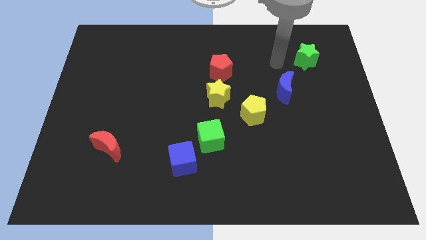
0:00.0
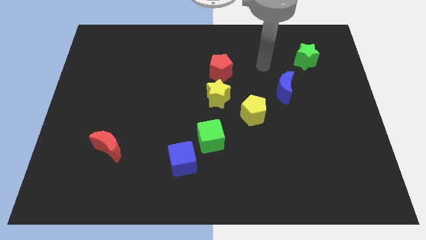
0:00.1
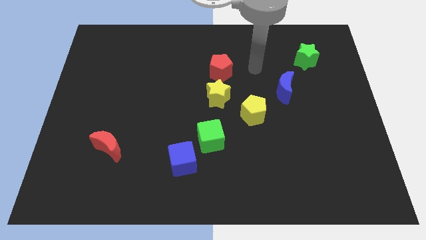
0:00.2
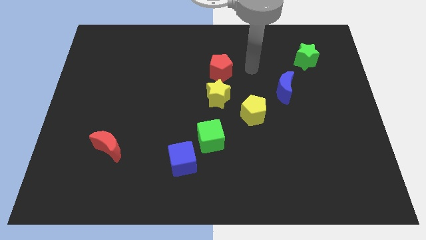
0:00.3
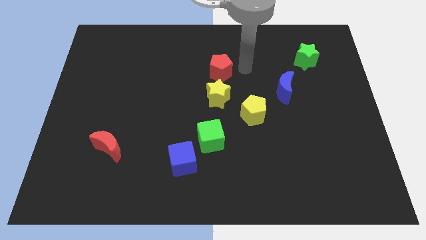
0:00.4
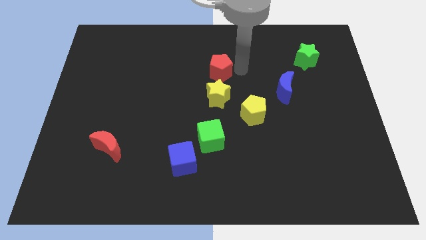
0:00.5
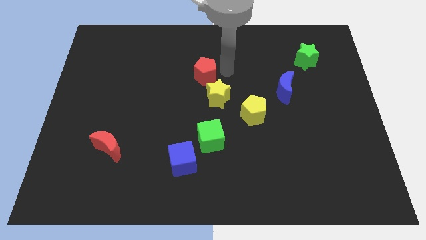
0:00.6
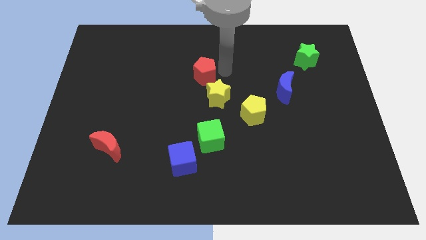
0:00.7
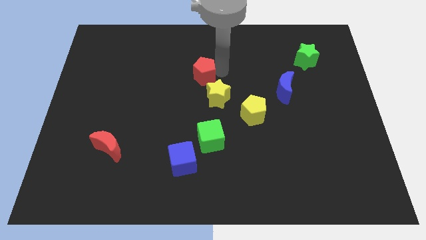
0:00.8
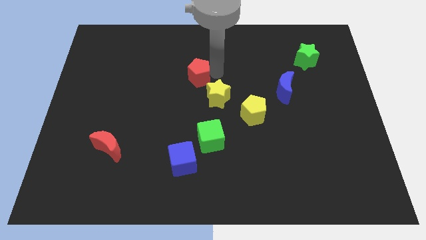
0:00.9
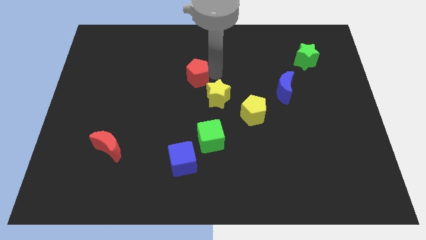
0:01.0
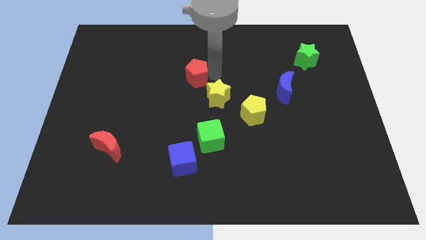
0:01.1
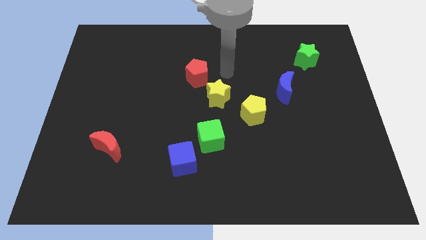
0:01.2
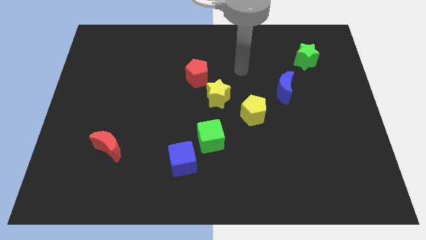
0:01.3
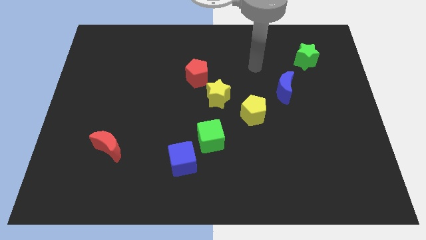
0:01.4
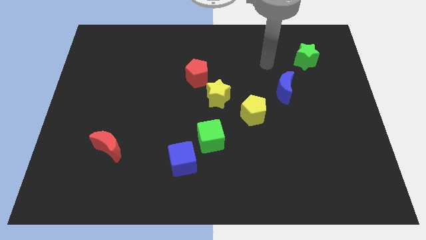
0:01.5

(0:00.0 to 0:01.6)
slightly push the red pentagon towards the left

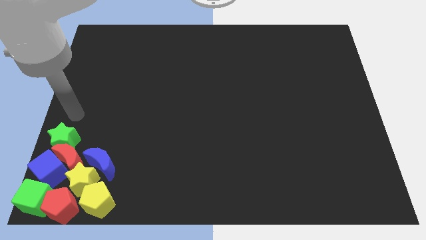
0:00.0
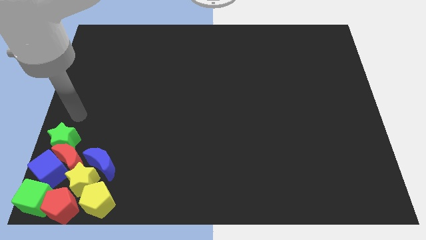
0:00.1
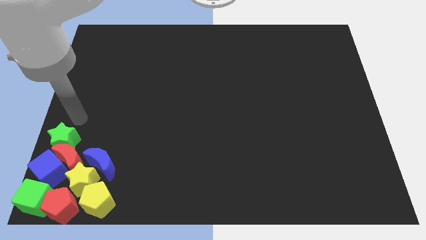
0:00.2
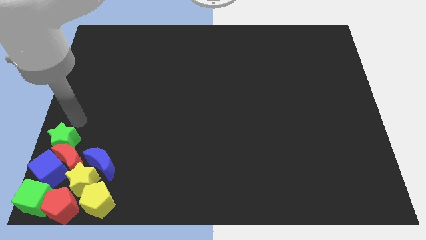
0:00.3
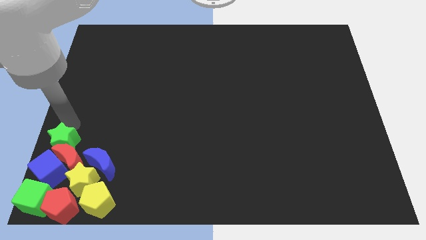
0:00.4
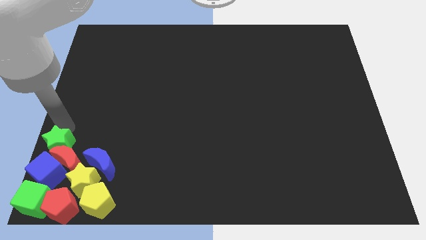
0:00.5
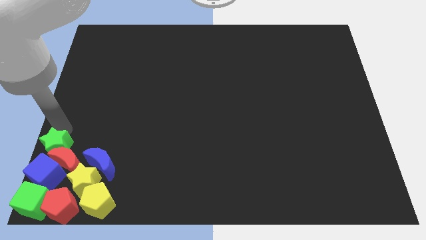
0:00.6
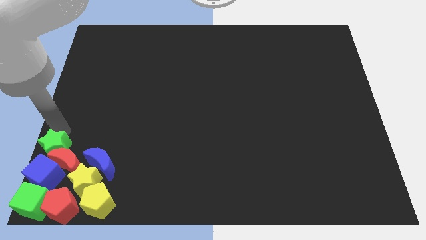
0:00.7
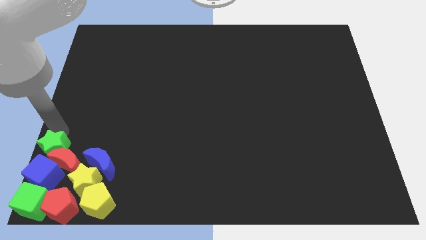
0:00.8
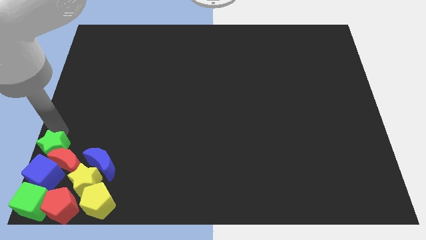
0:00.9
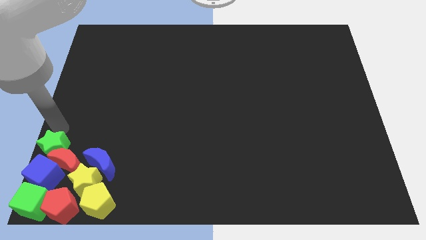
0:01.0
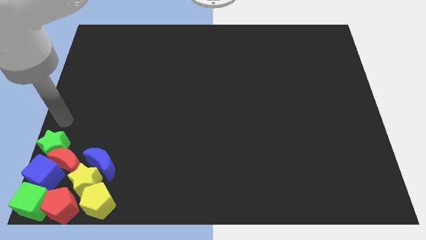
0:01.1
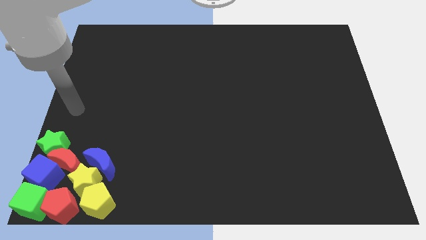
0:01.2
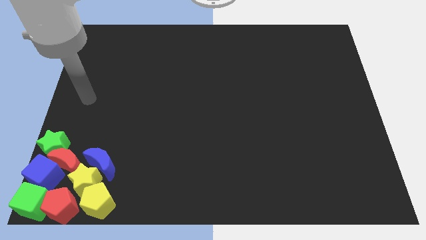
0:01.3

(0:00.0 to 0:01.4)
slide the green star into the group of blocks

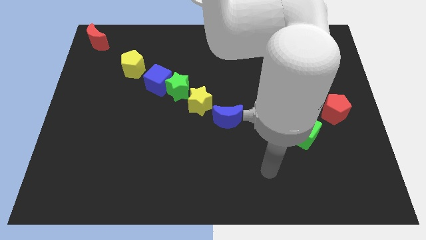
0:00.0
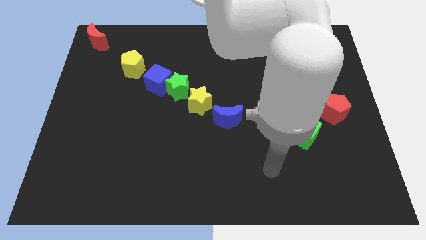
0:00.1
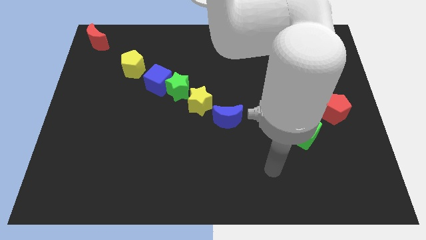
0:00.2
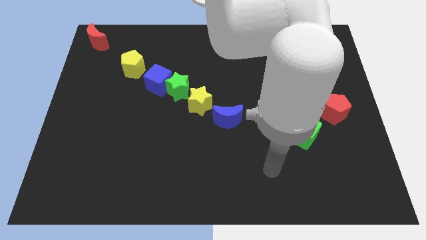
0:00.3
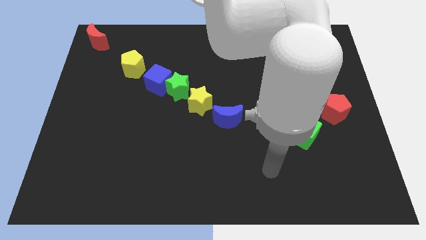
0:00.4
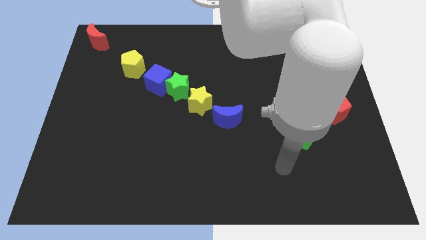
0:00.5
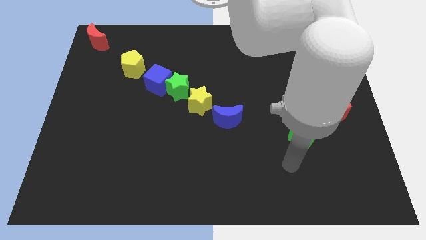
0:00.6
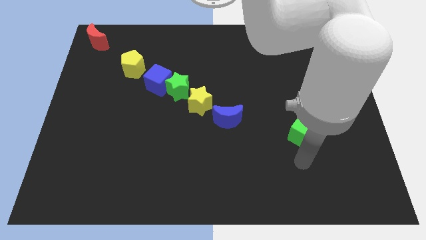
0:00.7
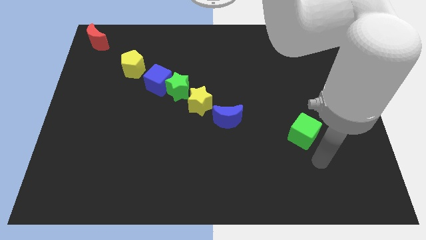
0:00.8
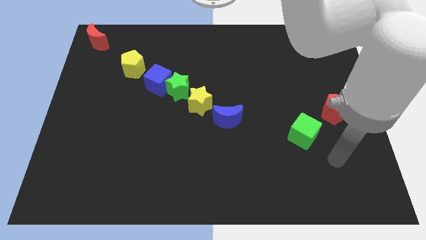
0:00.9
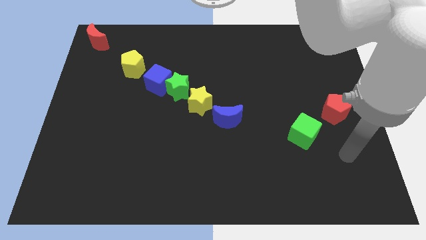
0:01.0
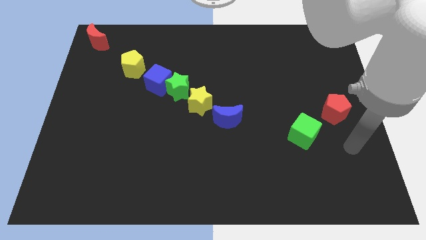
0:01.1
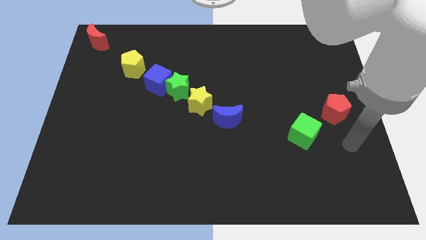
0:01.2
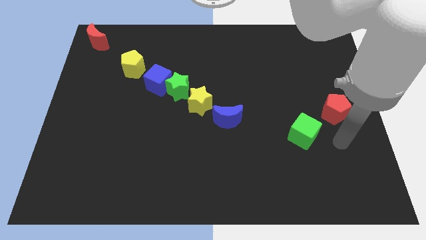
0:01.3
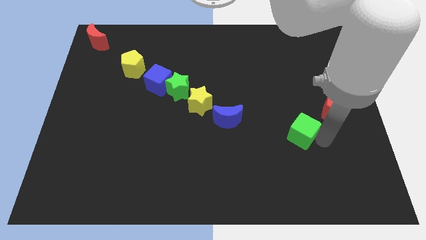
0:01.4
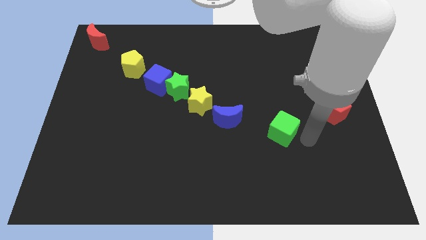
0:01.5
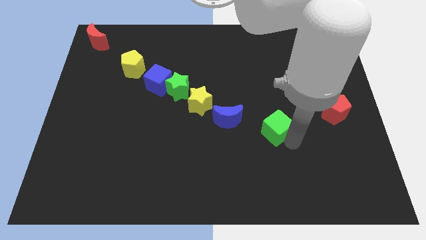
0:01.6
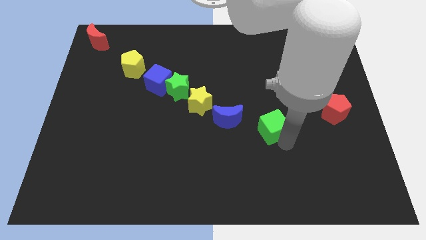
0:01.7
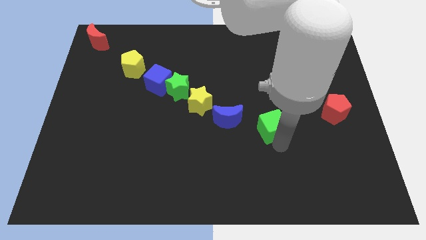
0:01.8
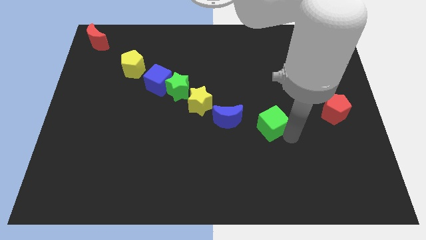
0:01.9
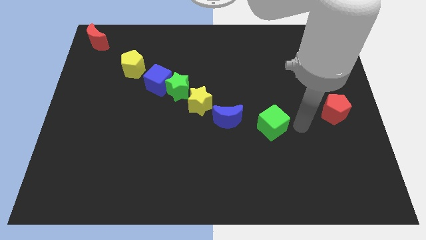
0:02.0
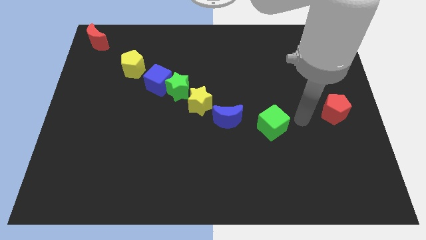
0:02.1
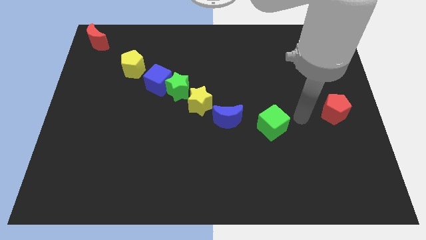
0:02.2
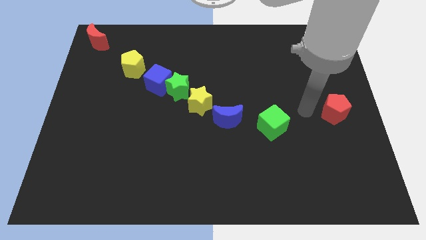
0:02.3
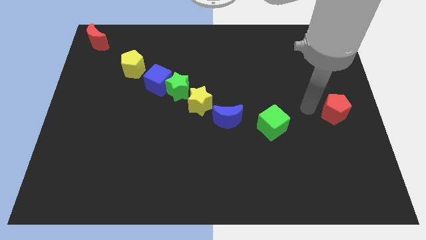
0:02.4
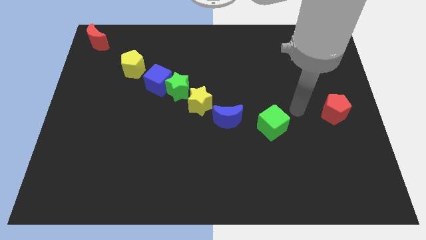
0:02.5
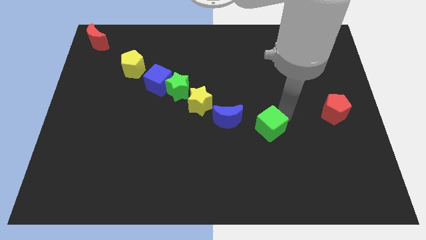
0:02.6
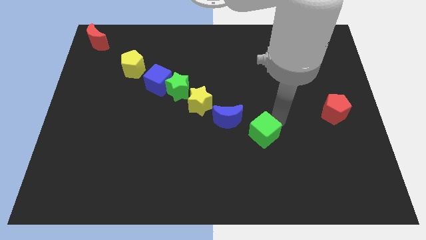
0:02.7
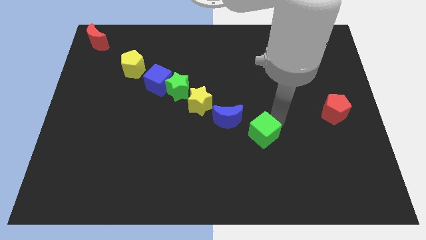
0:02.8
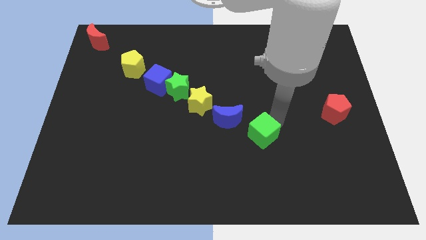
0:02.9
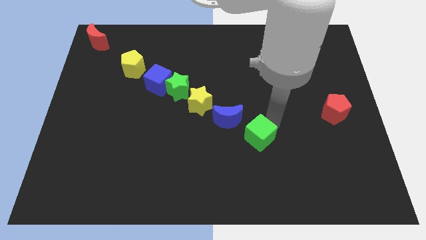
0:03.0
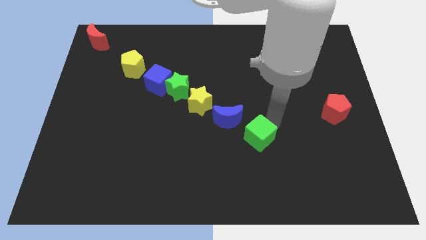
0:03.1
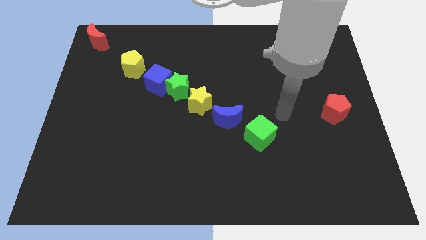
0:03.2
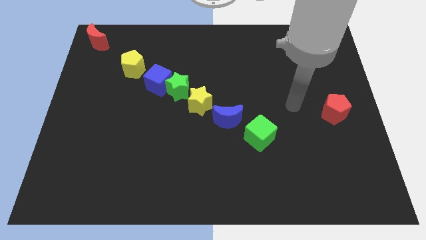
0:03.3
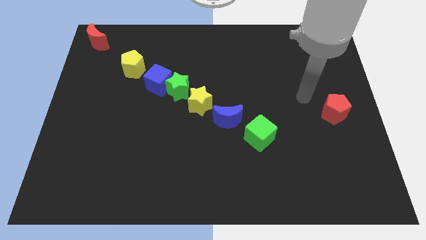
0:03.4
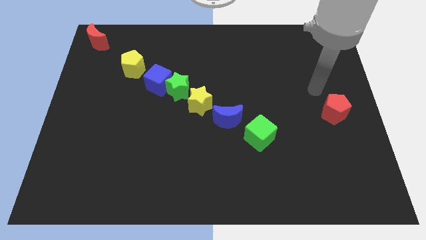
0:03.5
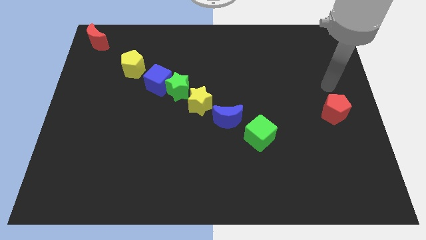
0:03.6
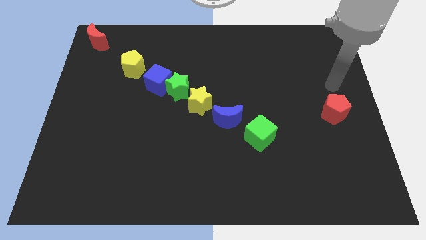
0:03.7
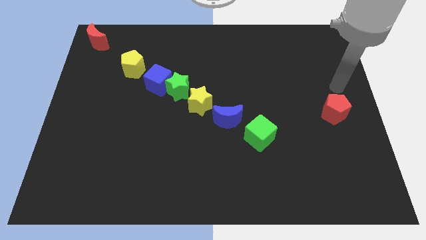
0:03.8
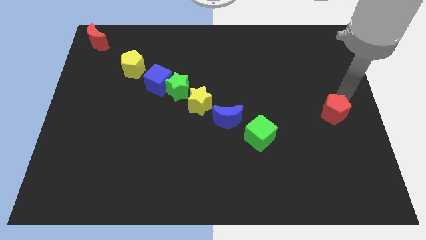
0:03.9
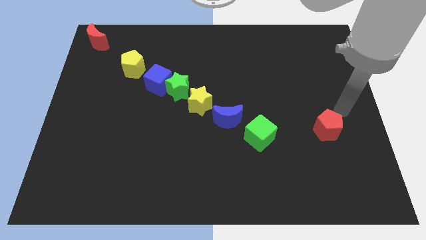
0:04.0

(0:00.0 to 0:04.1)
drag the green cube to the right of the blue cube

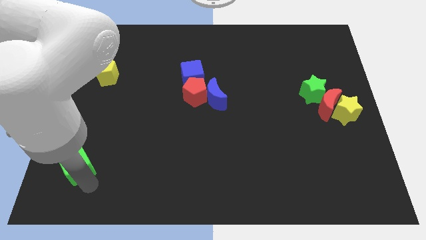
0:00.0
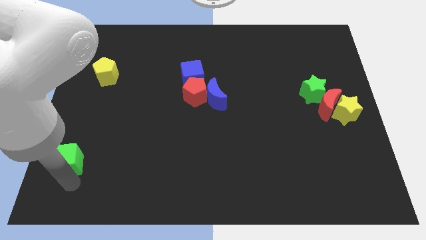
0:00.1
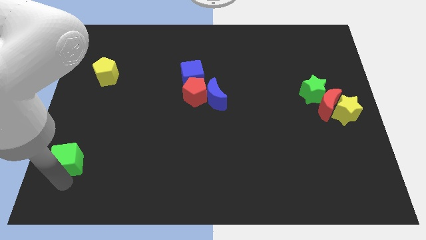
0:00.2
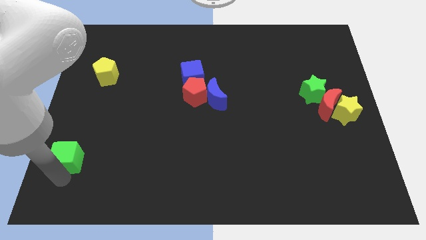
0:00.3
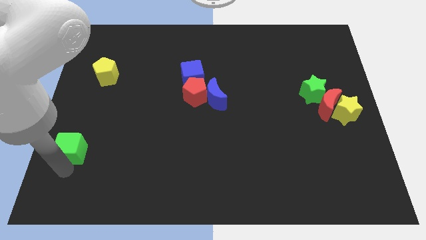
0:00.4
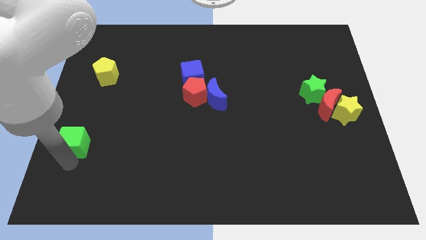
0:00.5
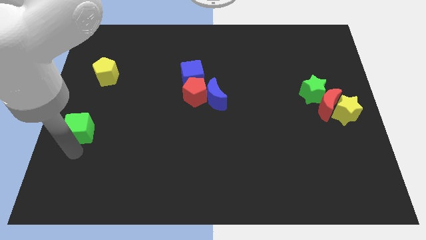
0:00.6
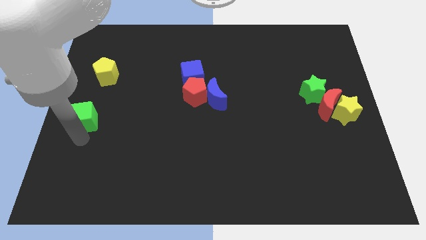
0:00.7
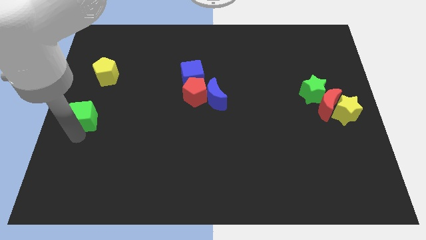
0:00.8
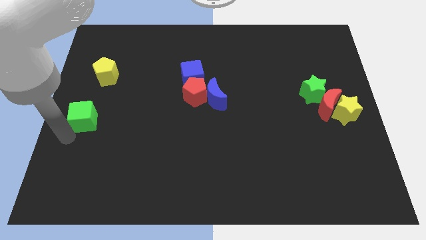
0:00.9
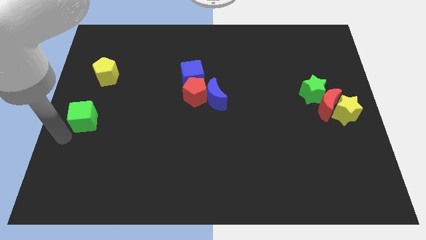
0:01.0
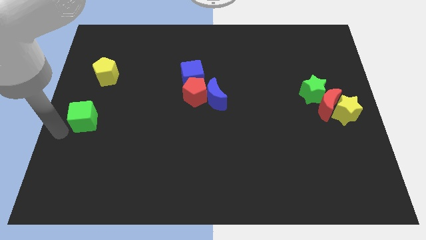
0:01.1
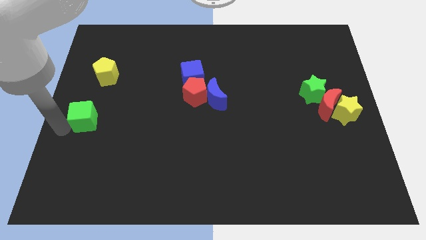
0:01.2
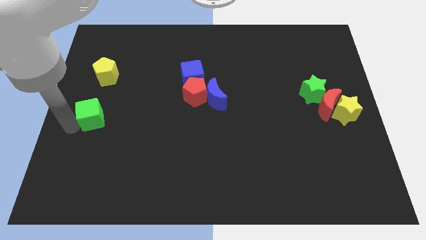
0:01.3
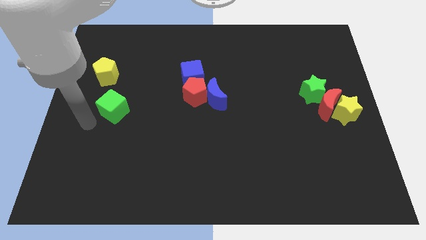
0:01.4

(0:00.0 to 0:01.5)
push green cube below yellow star

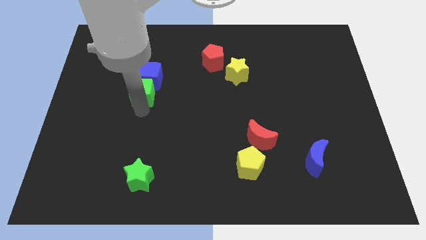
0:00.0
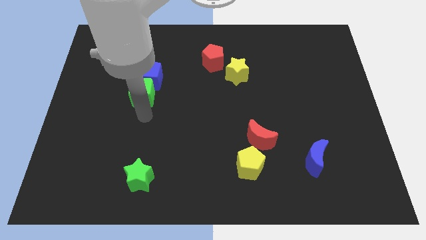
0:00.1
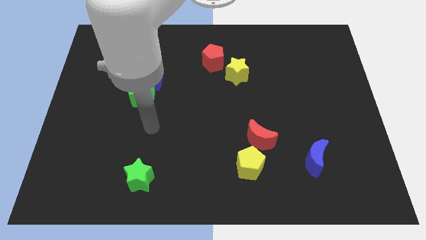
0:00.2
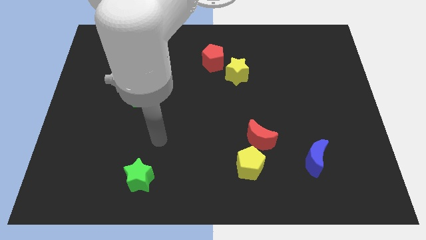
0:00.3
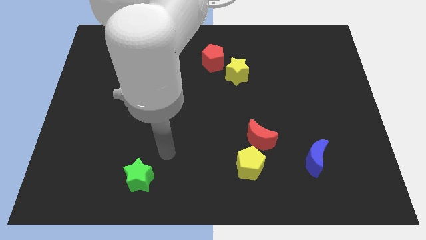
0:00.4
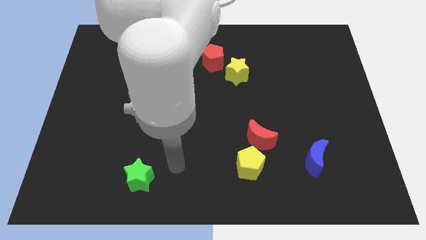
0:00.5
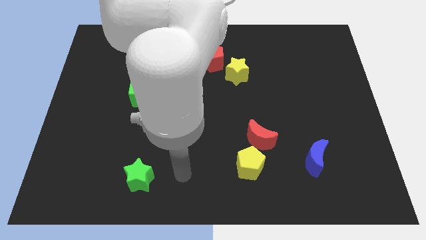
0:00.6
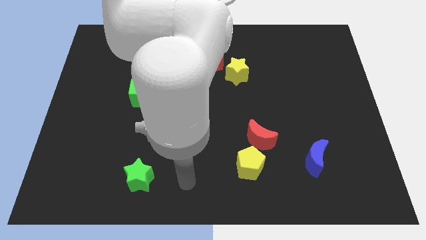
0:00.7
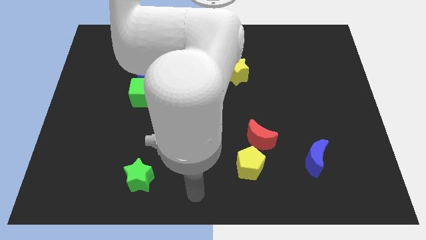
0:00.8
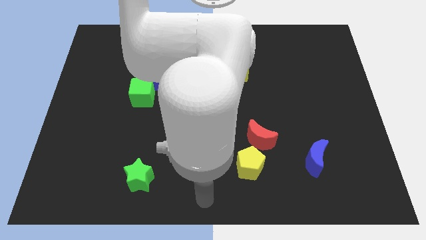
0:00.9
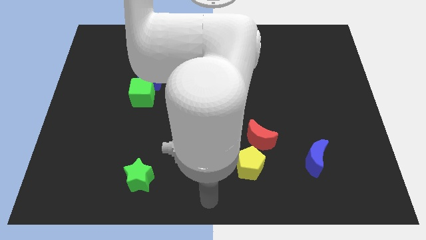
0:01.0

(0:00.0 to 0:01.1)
move your arm away from the green cube
